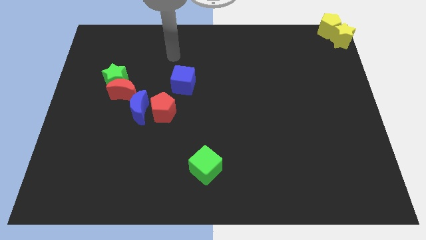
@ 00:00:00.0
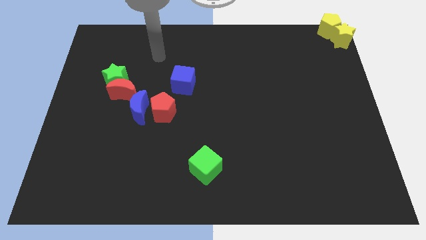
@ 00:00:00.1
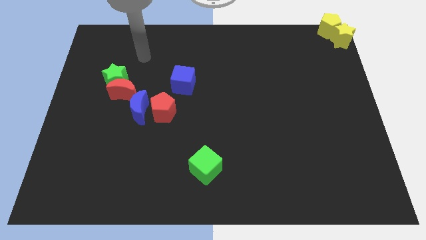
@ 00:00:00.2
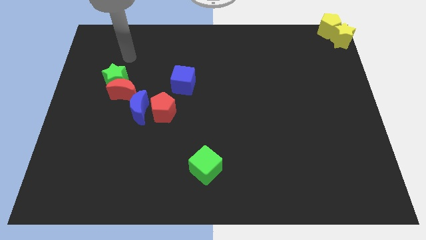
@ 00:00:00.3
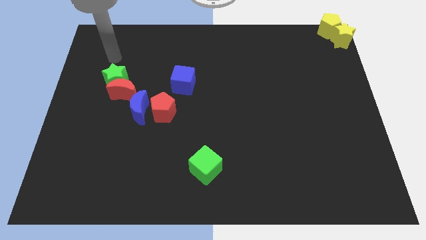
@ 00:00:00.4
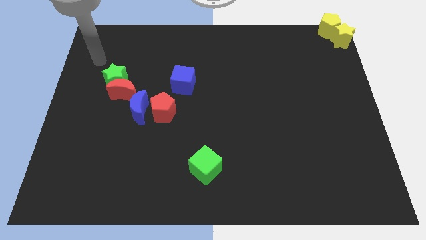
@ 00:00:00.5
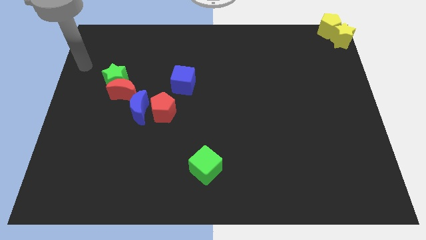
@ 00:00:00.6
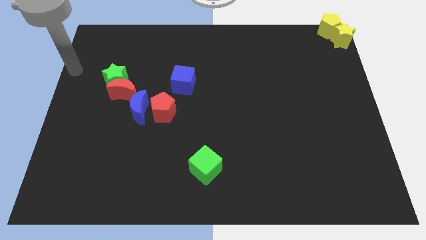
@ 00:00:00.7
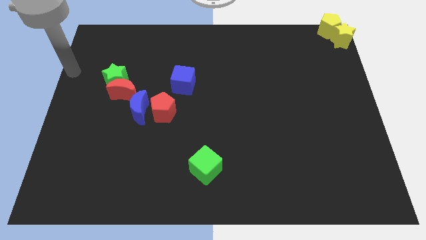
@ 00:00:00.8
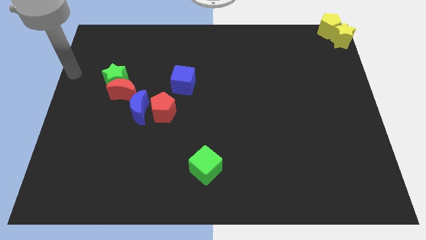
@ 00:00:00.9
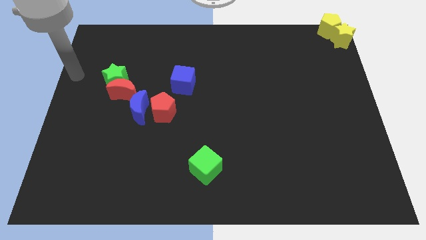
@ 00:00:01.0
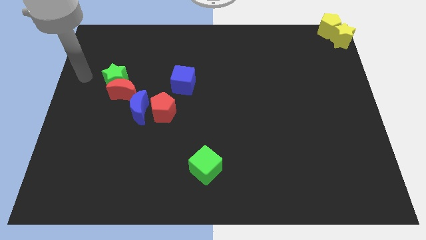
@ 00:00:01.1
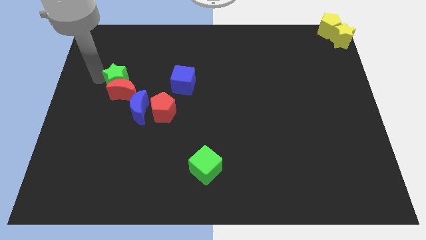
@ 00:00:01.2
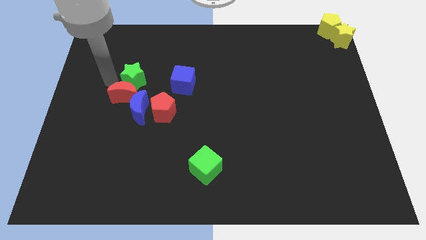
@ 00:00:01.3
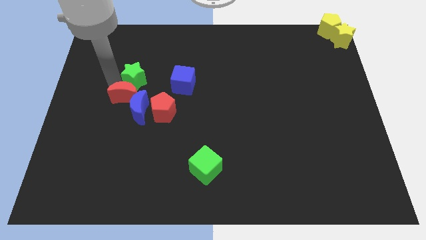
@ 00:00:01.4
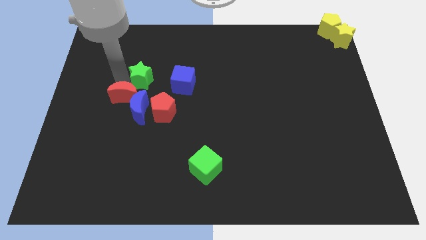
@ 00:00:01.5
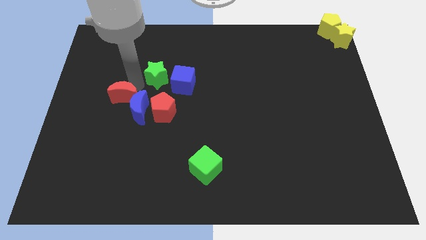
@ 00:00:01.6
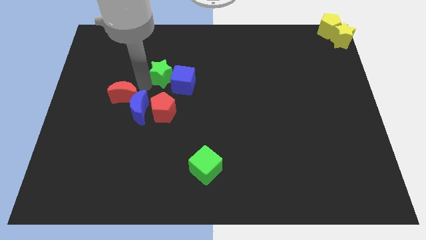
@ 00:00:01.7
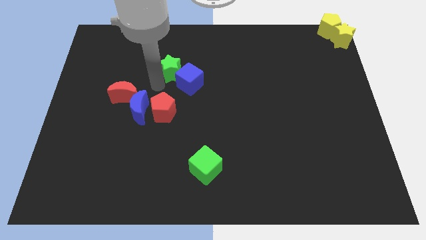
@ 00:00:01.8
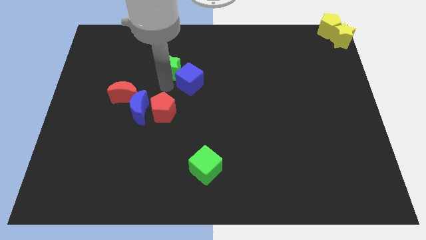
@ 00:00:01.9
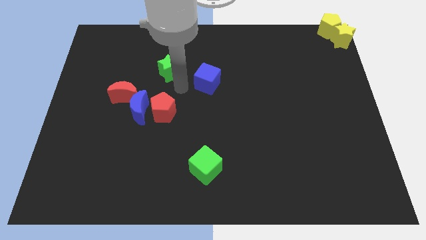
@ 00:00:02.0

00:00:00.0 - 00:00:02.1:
push the green star into the blue cube

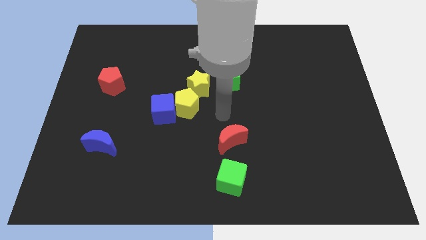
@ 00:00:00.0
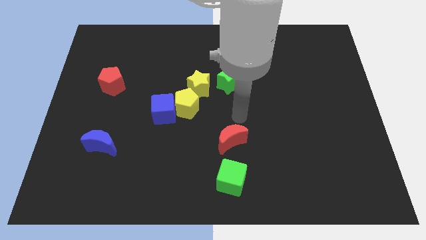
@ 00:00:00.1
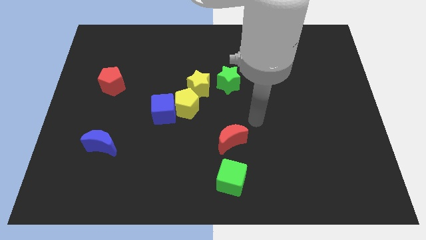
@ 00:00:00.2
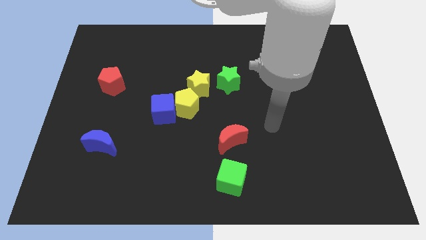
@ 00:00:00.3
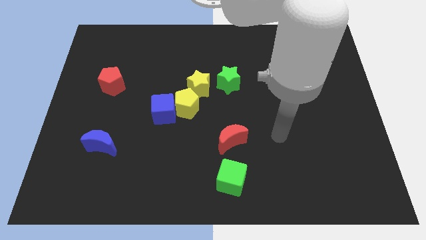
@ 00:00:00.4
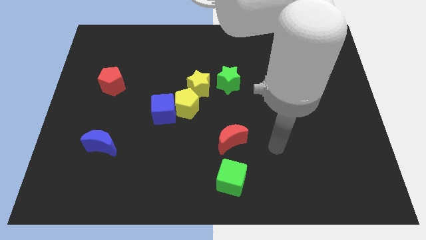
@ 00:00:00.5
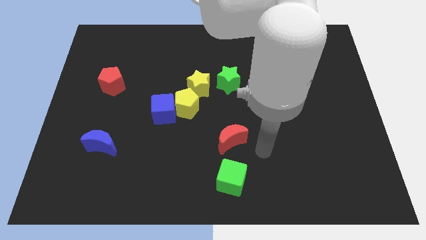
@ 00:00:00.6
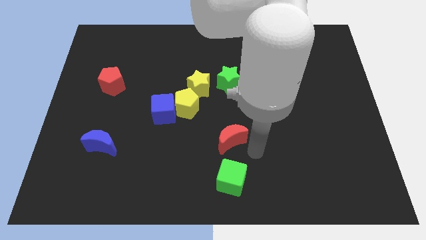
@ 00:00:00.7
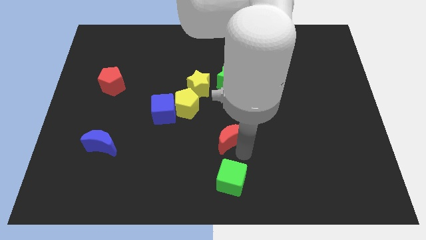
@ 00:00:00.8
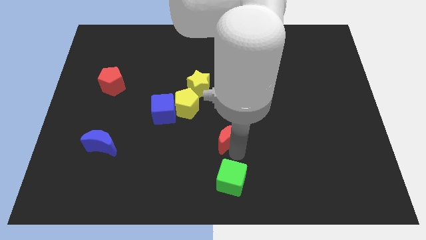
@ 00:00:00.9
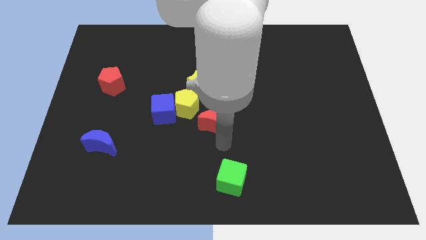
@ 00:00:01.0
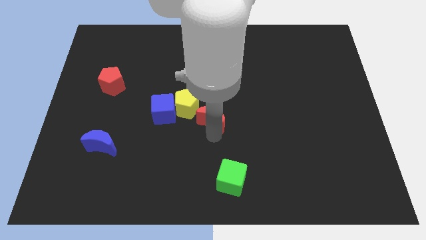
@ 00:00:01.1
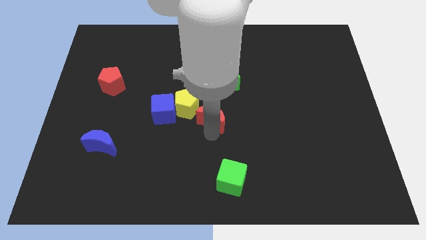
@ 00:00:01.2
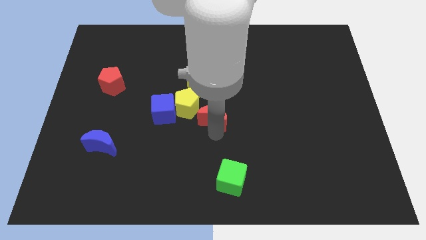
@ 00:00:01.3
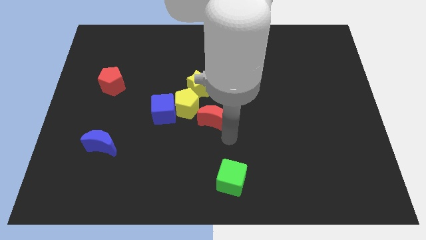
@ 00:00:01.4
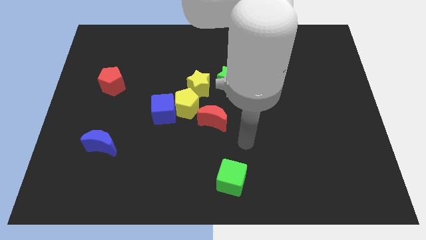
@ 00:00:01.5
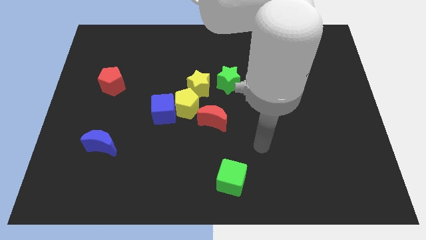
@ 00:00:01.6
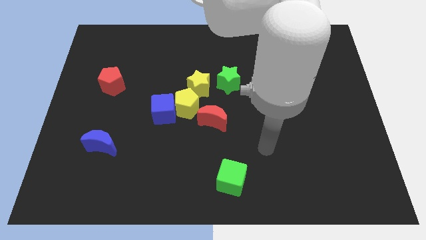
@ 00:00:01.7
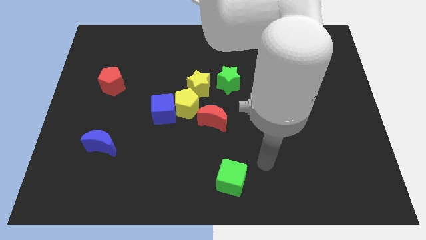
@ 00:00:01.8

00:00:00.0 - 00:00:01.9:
slightly push the red moon beside the yellow pentagon at the center

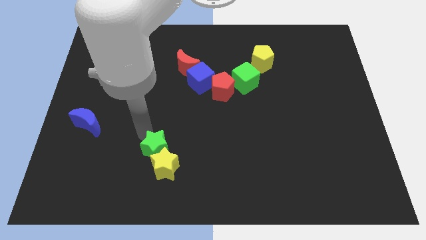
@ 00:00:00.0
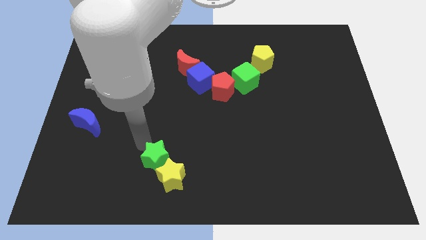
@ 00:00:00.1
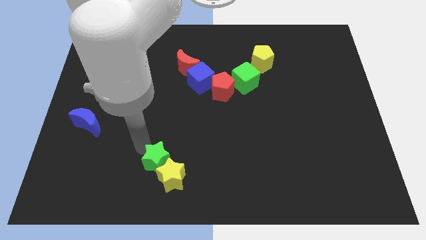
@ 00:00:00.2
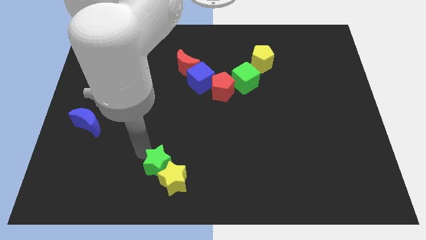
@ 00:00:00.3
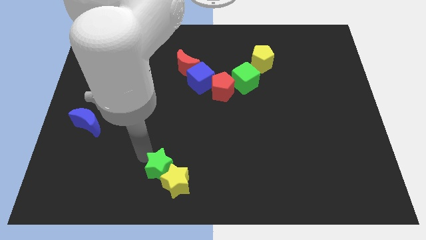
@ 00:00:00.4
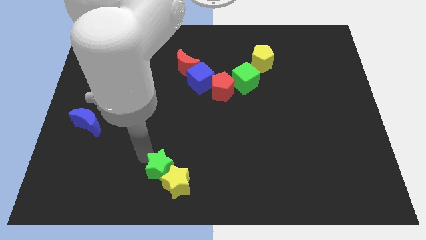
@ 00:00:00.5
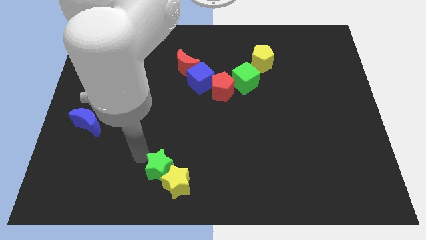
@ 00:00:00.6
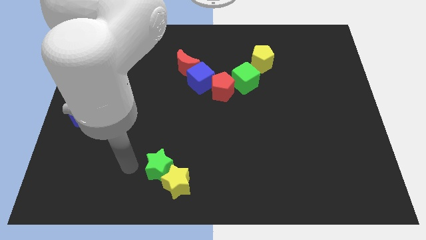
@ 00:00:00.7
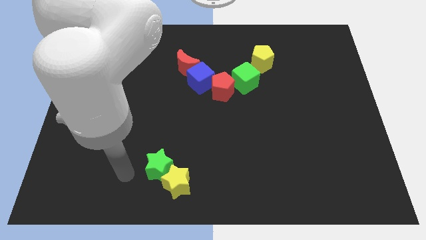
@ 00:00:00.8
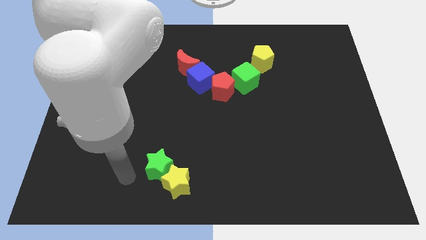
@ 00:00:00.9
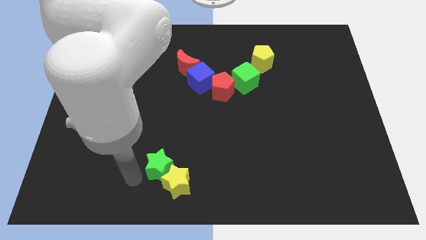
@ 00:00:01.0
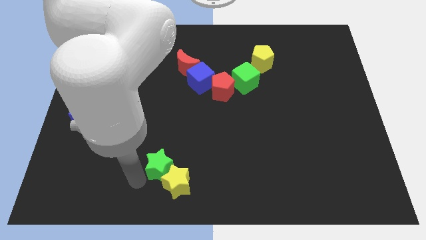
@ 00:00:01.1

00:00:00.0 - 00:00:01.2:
move both the stars slightly down

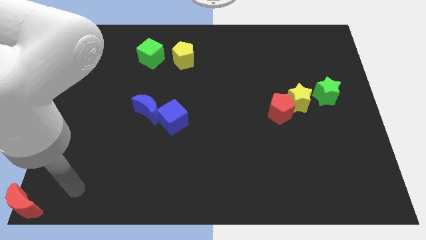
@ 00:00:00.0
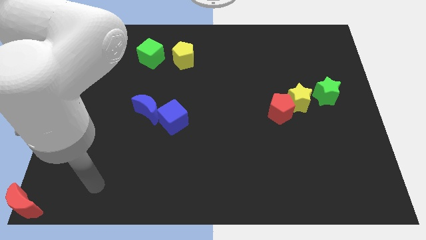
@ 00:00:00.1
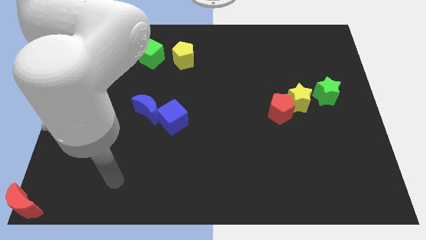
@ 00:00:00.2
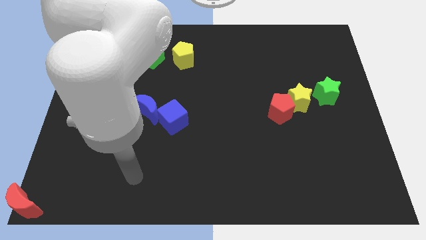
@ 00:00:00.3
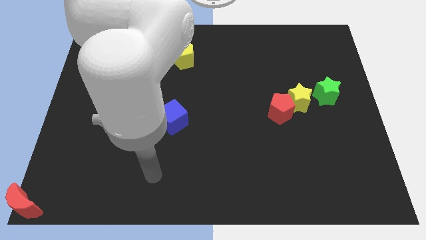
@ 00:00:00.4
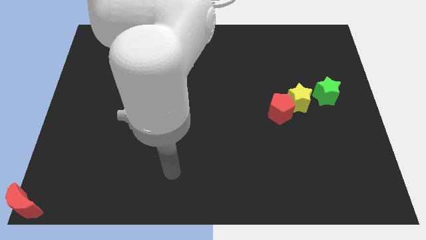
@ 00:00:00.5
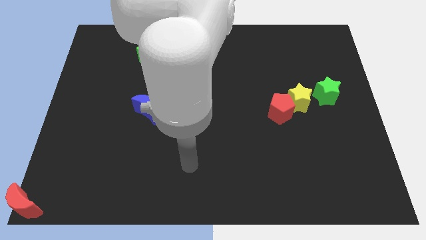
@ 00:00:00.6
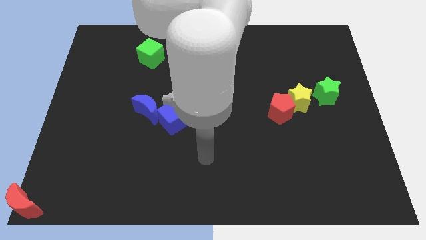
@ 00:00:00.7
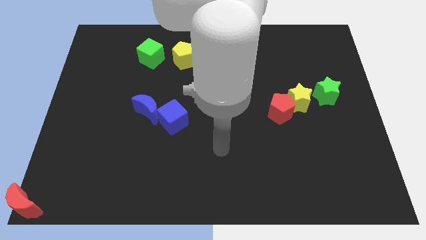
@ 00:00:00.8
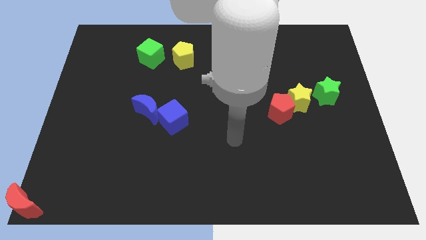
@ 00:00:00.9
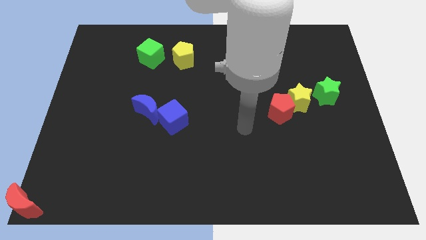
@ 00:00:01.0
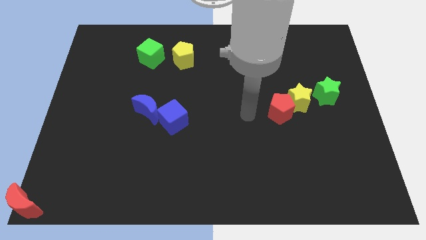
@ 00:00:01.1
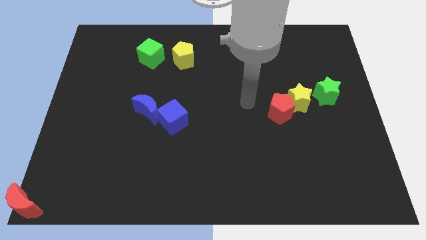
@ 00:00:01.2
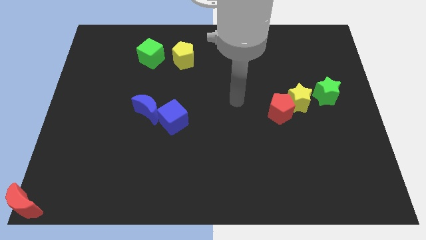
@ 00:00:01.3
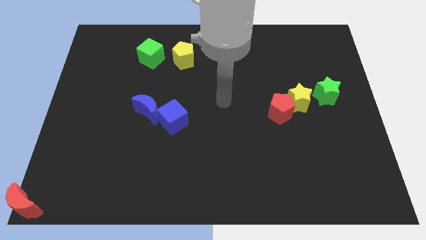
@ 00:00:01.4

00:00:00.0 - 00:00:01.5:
point your arm at the center of the board

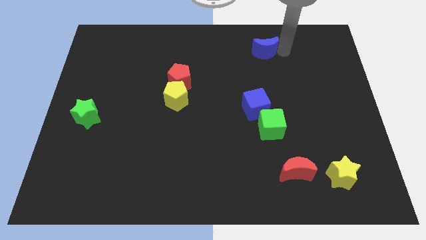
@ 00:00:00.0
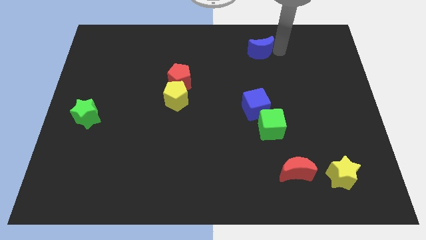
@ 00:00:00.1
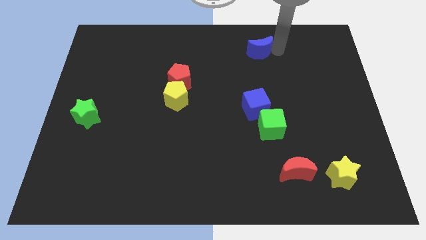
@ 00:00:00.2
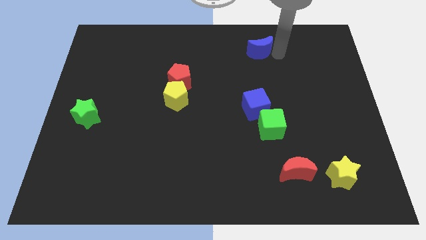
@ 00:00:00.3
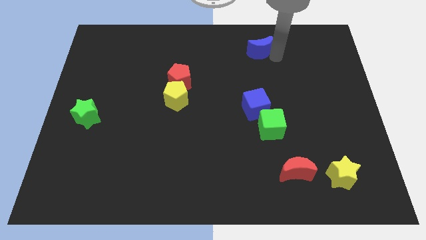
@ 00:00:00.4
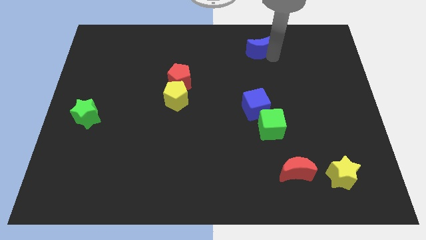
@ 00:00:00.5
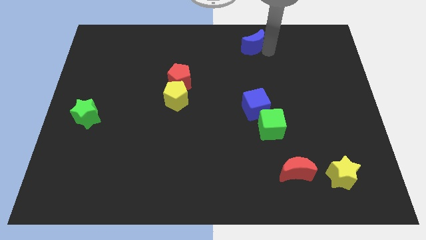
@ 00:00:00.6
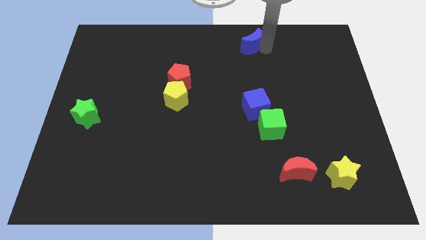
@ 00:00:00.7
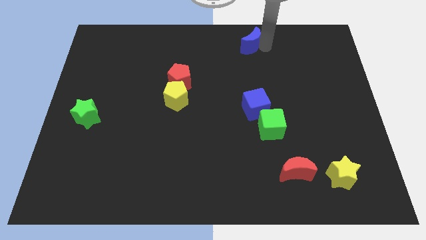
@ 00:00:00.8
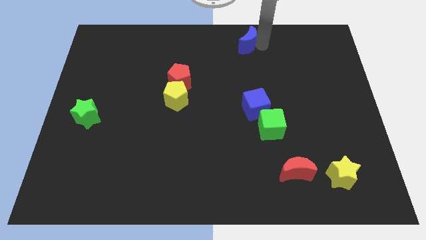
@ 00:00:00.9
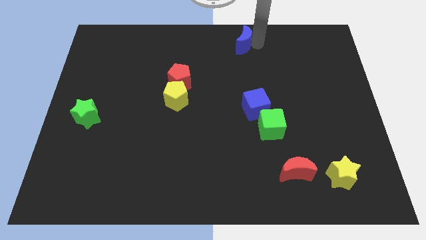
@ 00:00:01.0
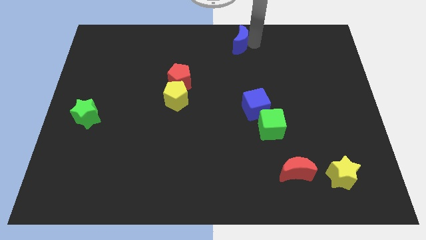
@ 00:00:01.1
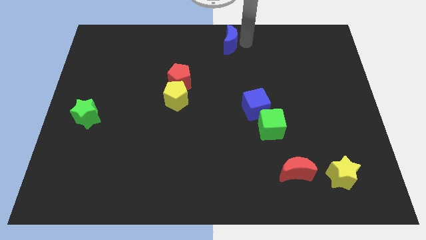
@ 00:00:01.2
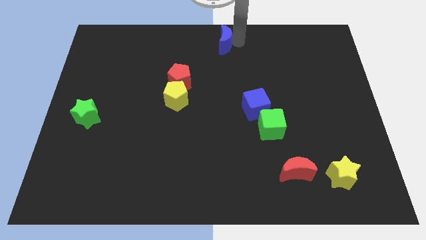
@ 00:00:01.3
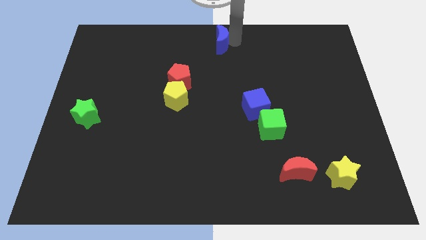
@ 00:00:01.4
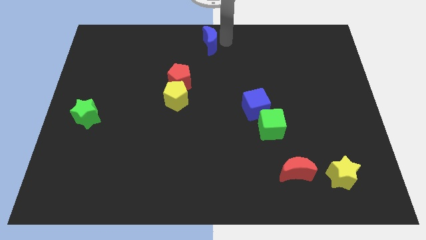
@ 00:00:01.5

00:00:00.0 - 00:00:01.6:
put the blue moon to the top center of the board

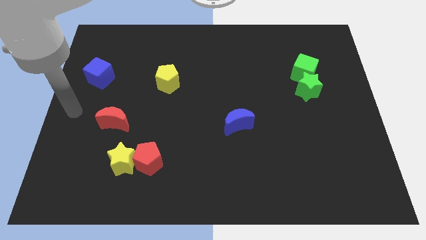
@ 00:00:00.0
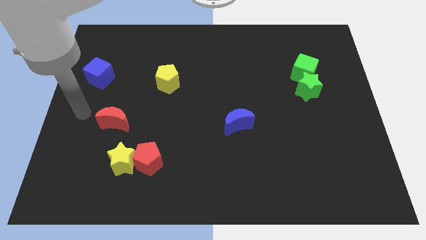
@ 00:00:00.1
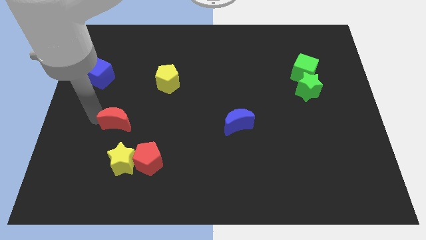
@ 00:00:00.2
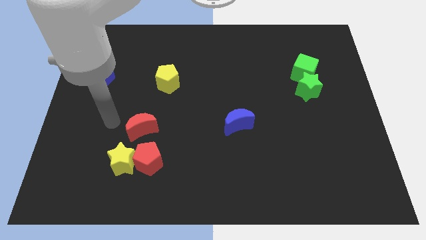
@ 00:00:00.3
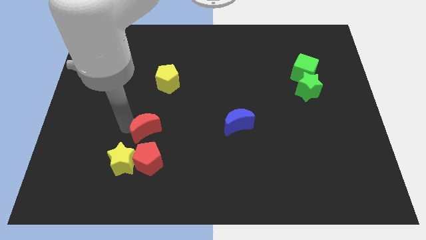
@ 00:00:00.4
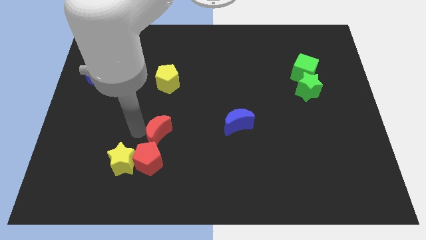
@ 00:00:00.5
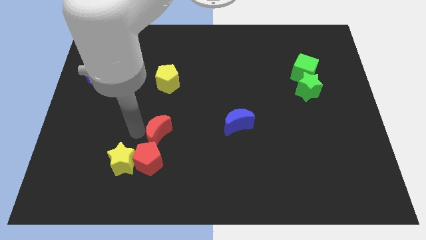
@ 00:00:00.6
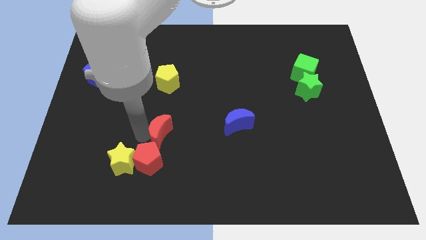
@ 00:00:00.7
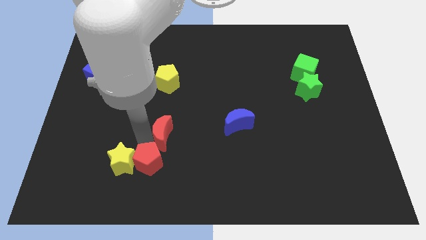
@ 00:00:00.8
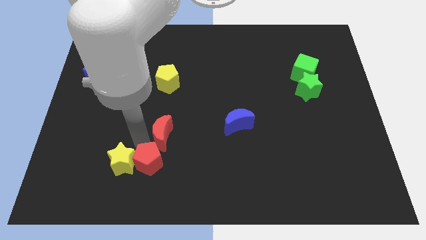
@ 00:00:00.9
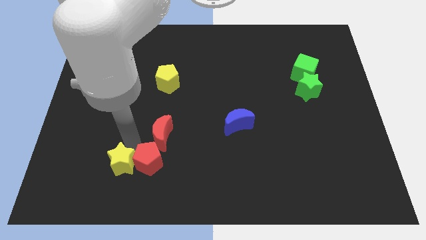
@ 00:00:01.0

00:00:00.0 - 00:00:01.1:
push the red crescent to the left top of the red pentagon
